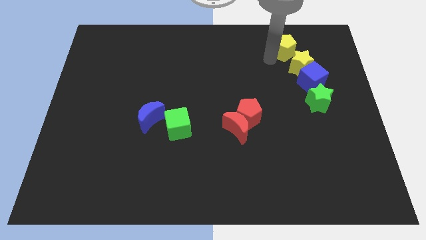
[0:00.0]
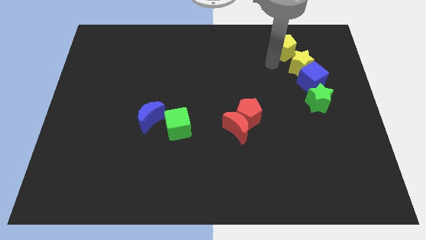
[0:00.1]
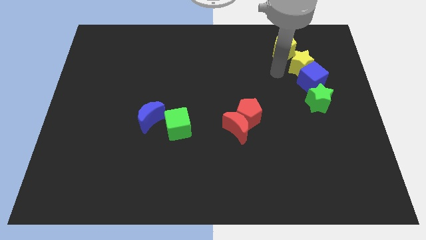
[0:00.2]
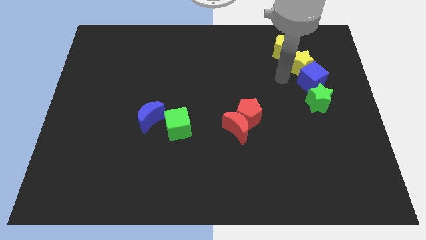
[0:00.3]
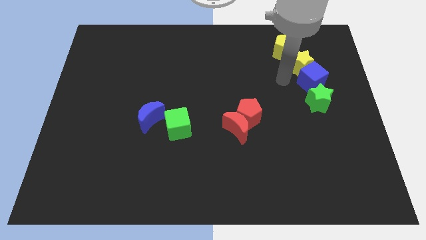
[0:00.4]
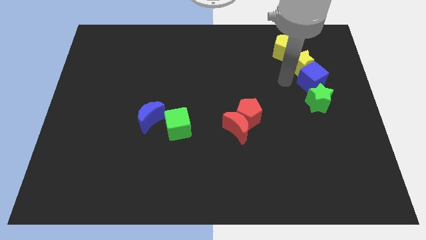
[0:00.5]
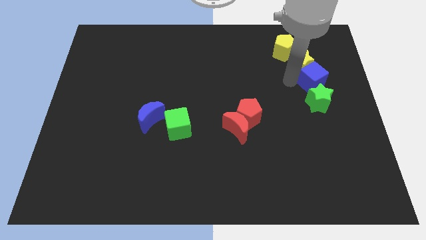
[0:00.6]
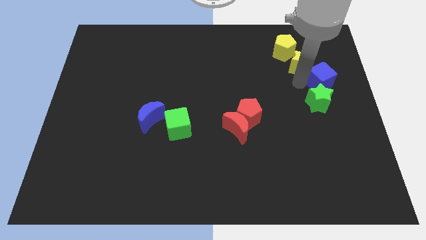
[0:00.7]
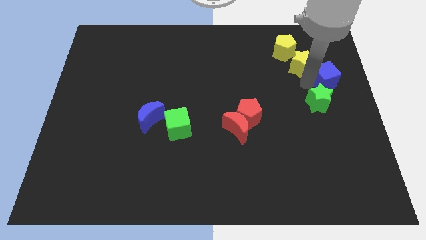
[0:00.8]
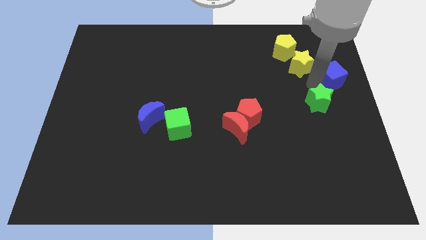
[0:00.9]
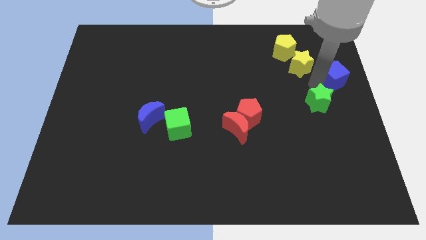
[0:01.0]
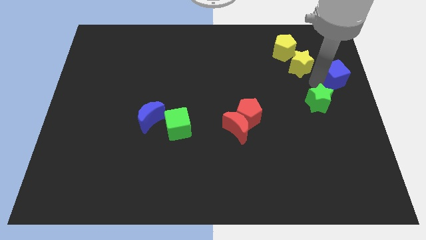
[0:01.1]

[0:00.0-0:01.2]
push the blue cube slightly to the right

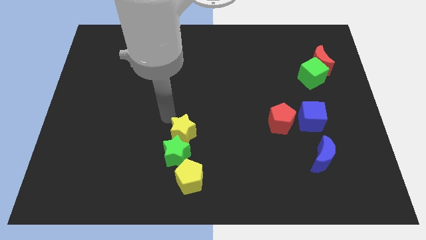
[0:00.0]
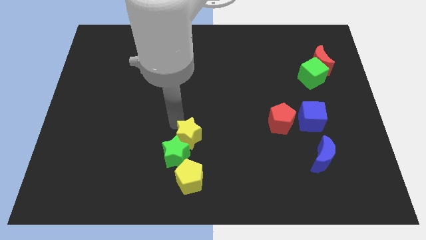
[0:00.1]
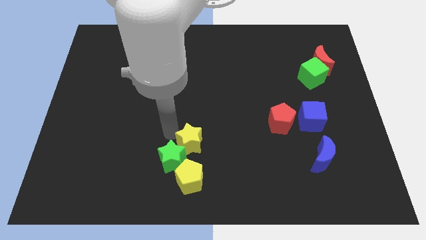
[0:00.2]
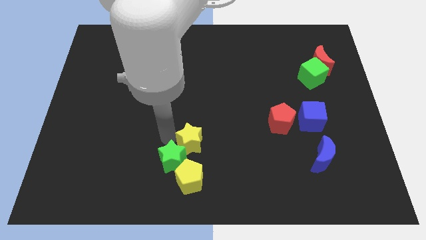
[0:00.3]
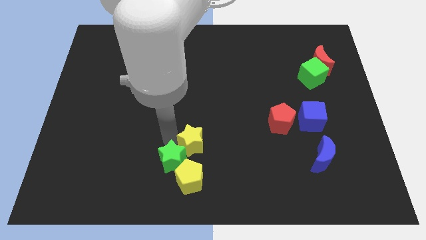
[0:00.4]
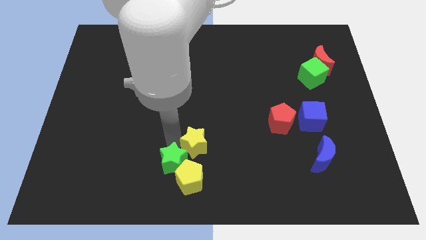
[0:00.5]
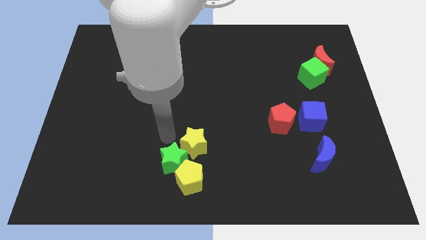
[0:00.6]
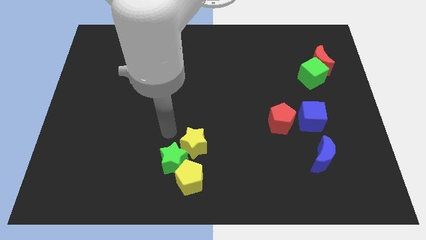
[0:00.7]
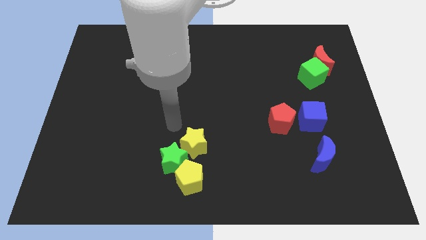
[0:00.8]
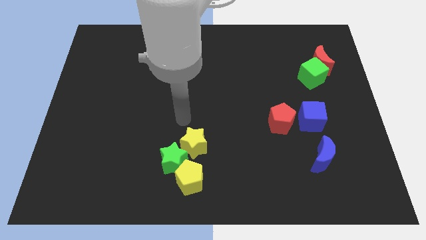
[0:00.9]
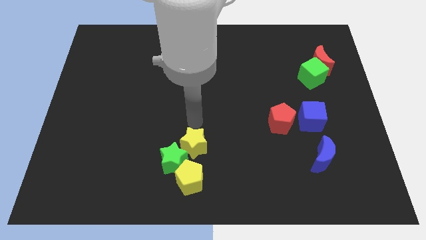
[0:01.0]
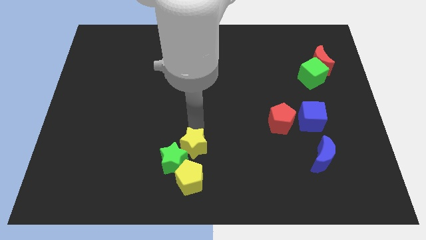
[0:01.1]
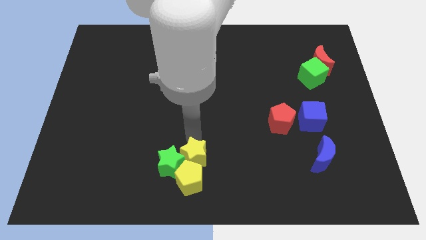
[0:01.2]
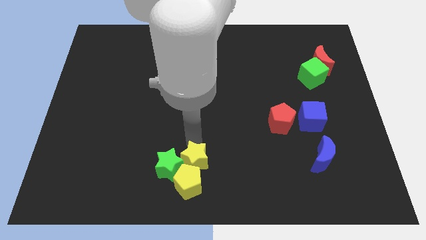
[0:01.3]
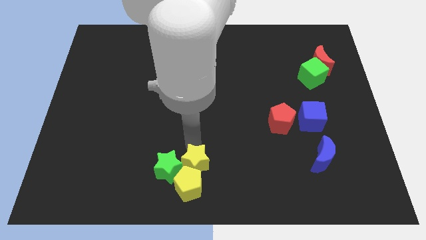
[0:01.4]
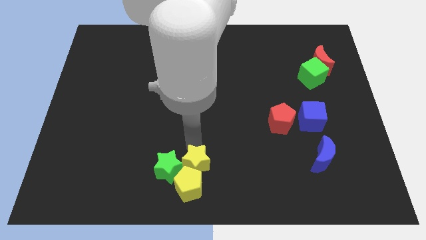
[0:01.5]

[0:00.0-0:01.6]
move yellow star on top of the yellow pentagon

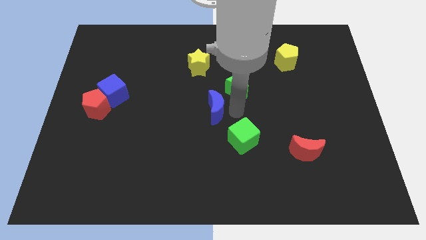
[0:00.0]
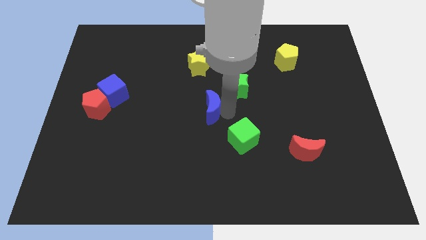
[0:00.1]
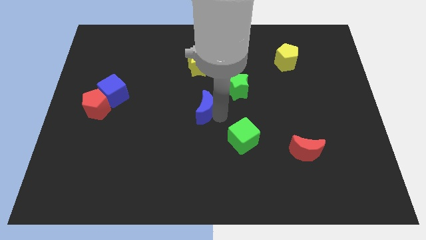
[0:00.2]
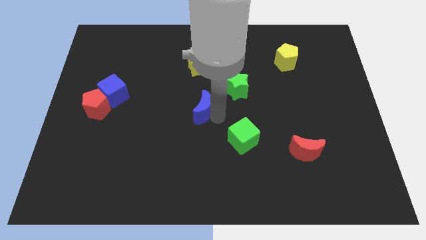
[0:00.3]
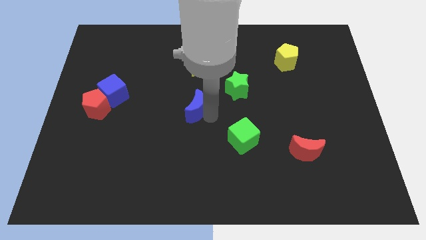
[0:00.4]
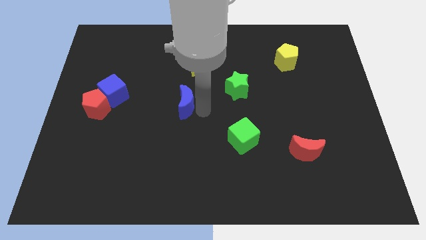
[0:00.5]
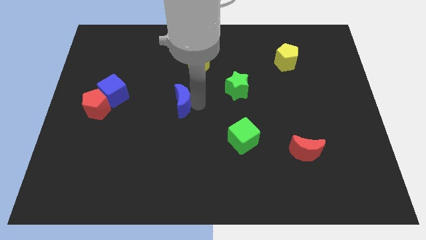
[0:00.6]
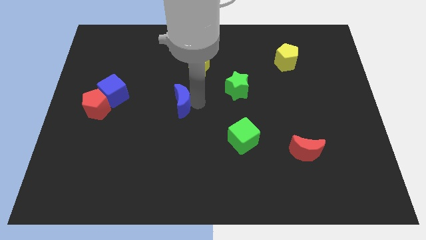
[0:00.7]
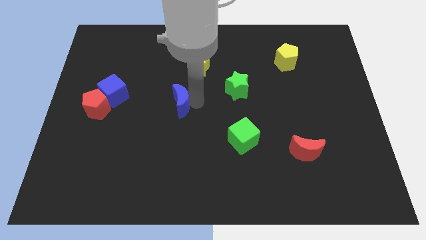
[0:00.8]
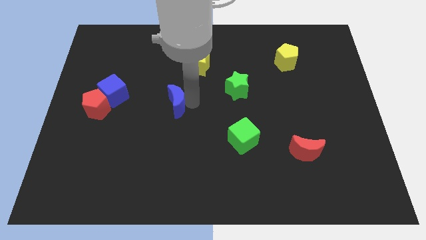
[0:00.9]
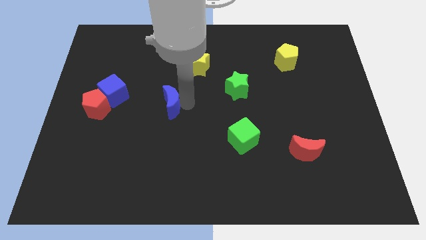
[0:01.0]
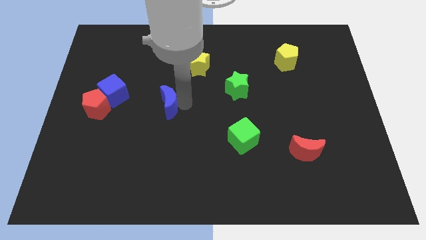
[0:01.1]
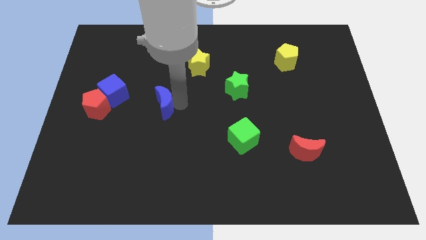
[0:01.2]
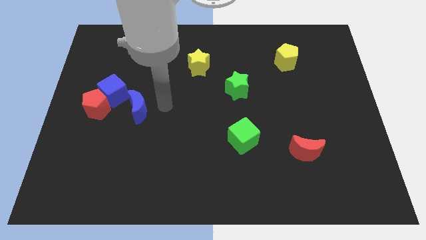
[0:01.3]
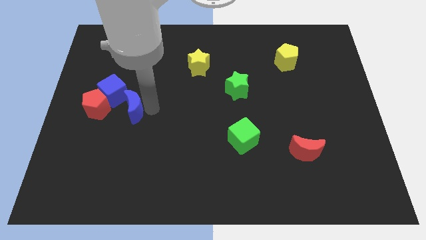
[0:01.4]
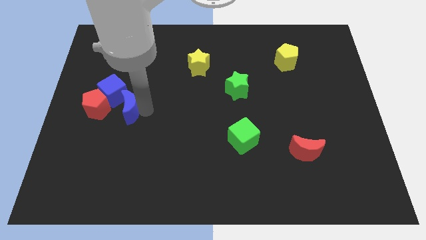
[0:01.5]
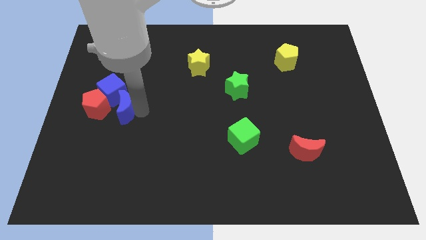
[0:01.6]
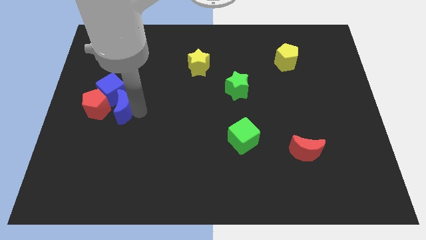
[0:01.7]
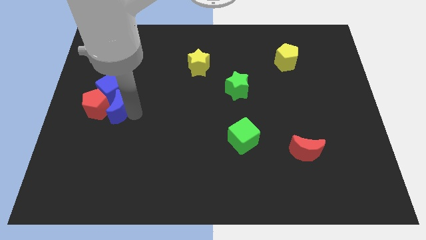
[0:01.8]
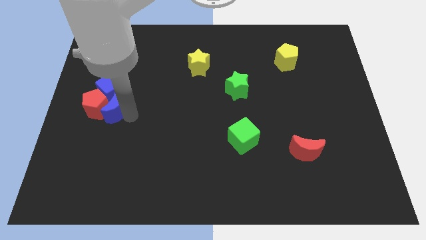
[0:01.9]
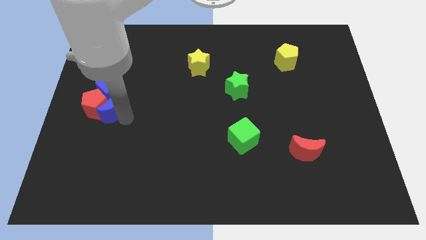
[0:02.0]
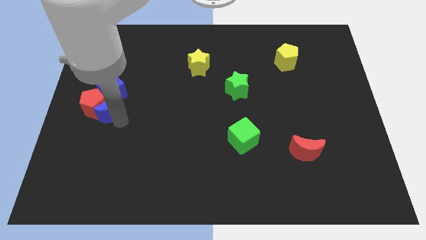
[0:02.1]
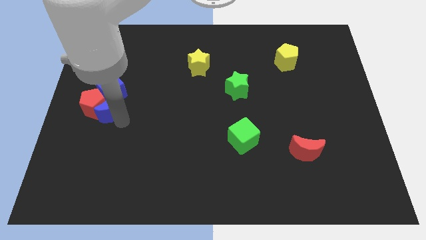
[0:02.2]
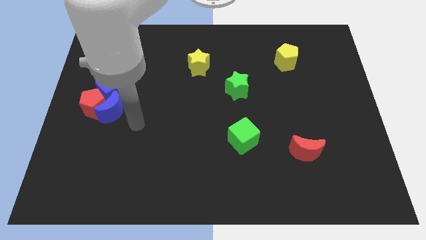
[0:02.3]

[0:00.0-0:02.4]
move the blue crescent into the red pentagon

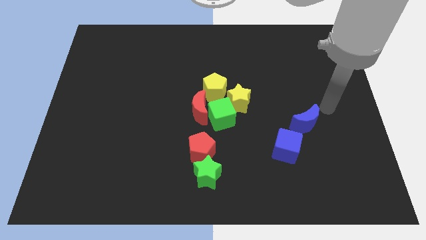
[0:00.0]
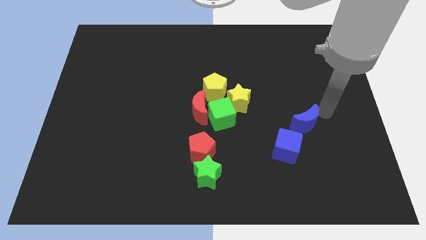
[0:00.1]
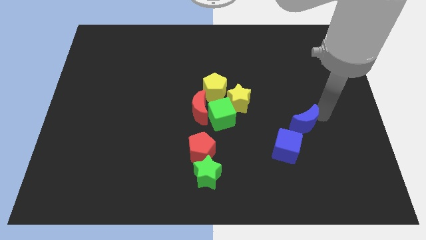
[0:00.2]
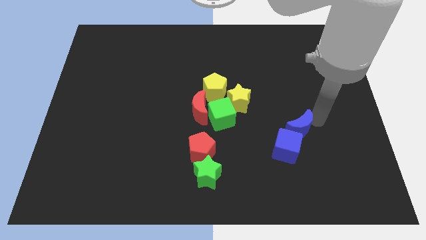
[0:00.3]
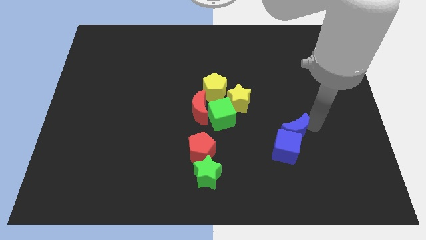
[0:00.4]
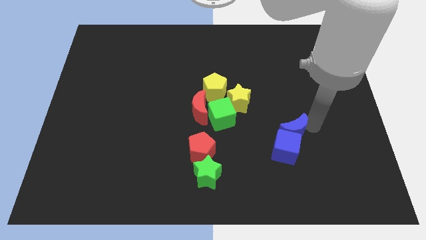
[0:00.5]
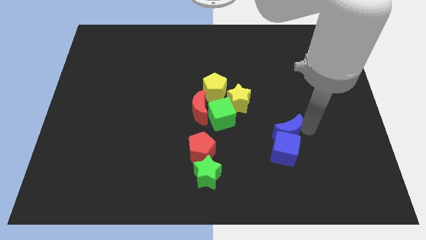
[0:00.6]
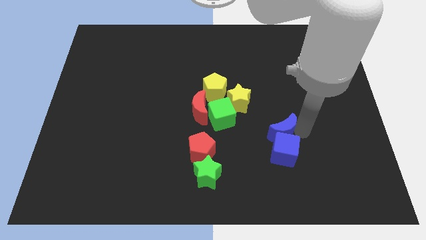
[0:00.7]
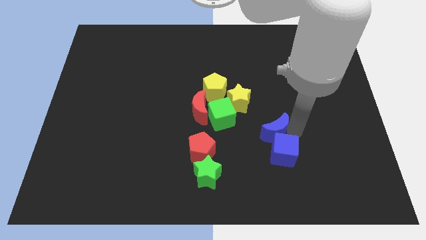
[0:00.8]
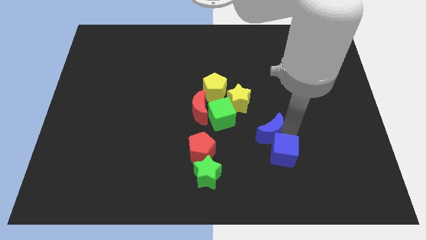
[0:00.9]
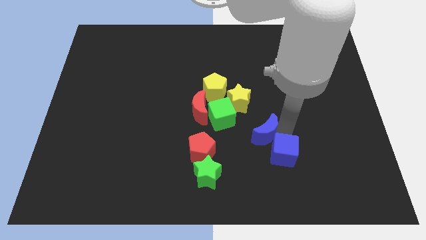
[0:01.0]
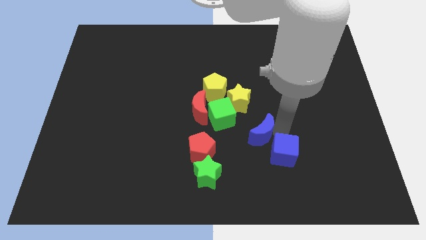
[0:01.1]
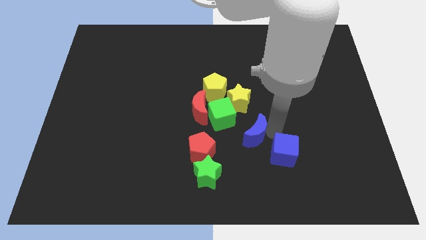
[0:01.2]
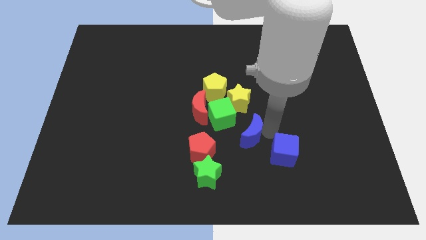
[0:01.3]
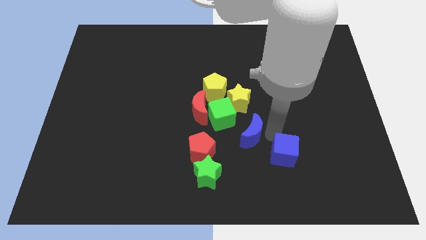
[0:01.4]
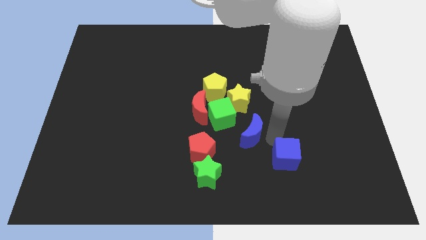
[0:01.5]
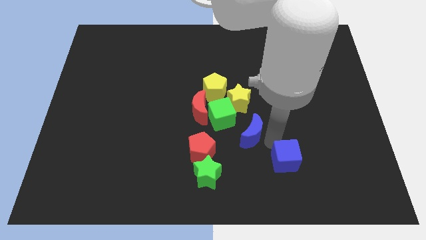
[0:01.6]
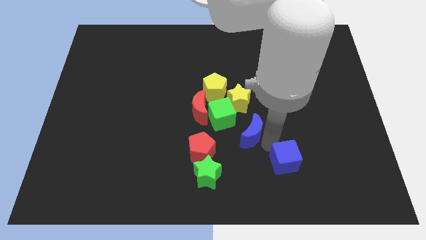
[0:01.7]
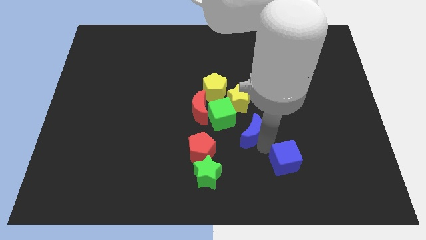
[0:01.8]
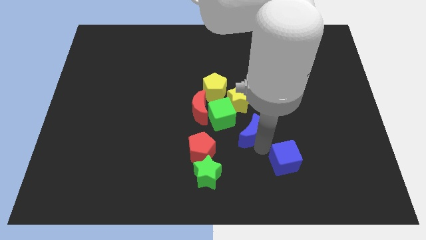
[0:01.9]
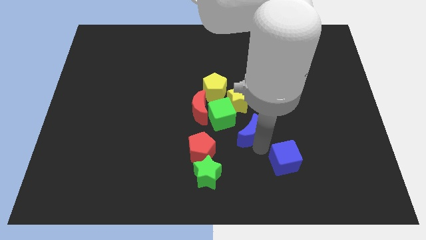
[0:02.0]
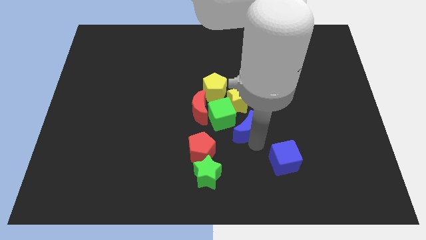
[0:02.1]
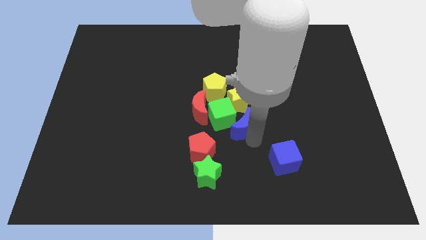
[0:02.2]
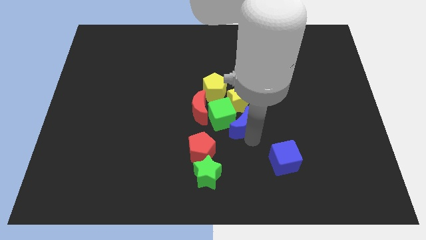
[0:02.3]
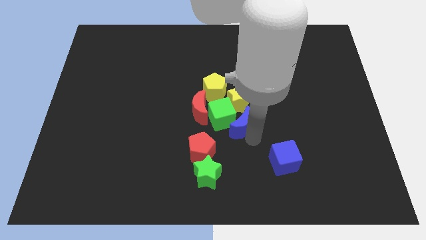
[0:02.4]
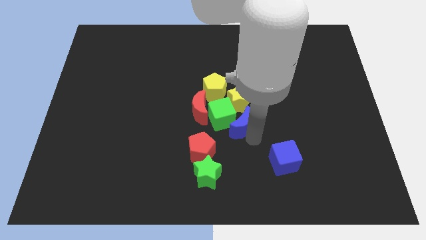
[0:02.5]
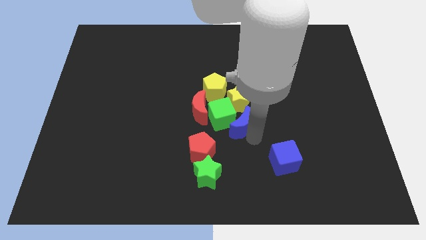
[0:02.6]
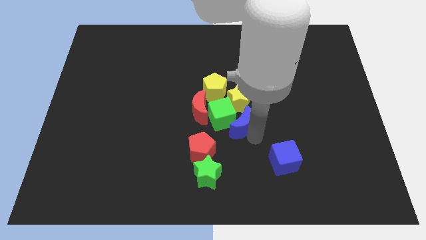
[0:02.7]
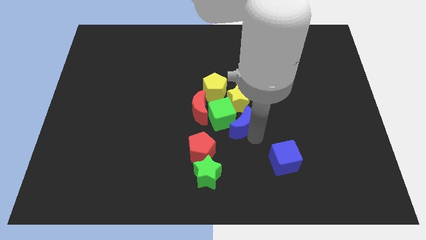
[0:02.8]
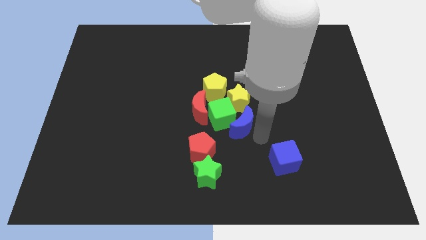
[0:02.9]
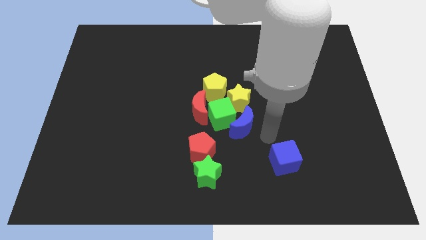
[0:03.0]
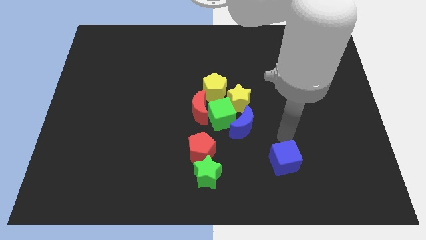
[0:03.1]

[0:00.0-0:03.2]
move the blue crescent to the bottom right side of green cube

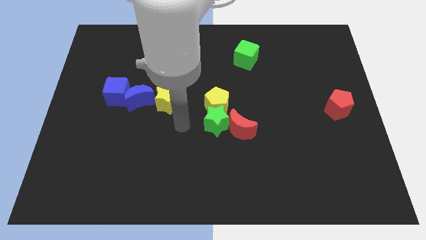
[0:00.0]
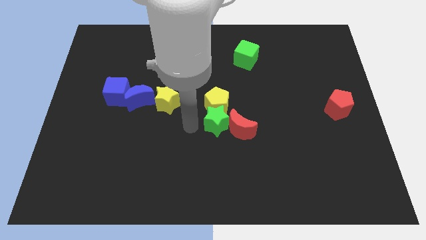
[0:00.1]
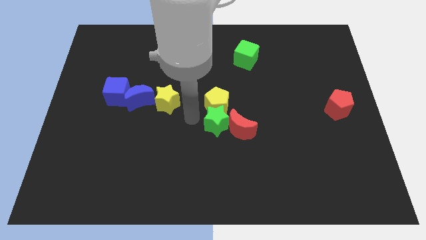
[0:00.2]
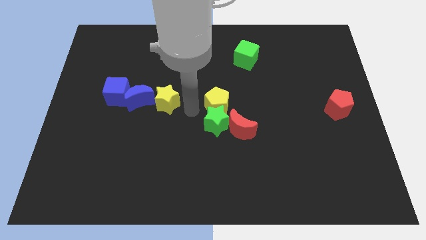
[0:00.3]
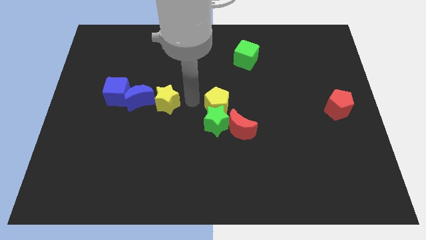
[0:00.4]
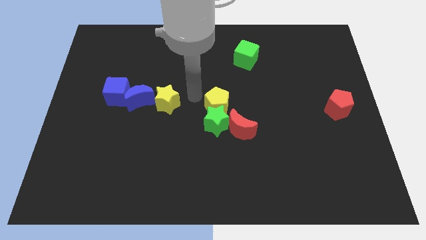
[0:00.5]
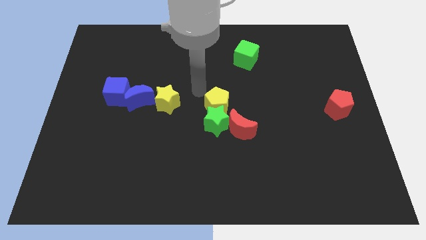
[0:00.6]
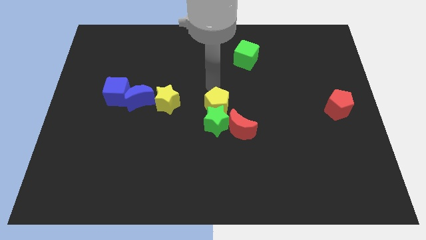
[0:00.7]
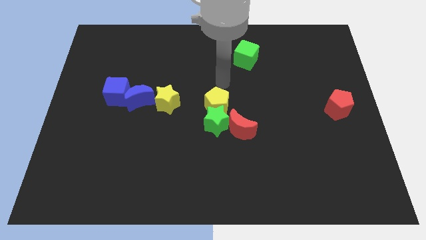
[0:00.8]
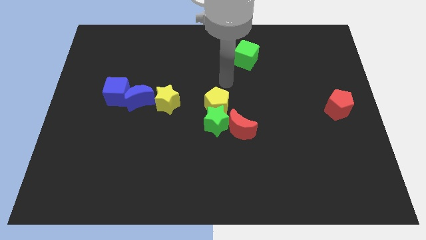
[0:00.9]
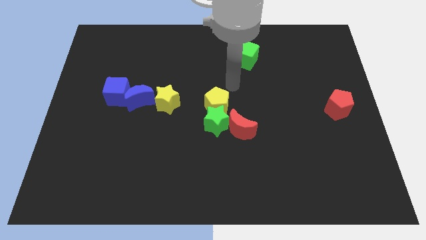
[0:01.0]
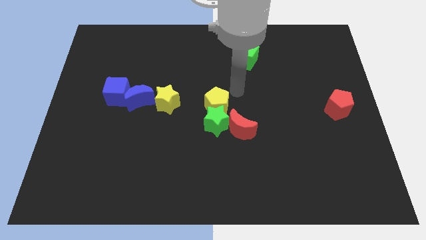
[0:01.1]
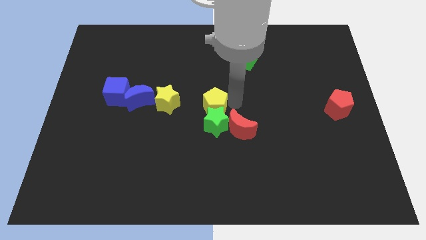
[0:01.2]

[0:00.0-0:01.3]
move your hand right to the yellow pentagon
